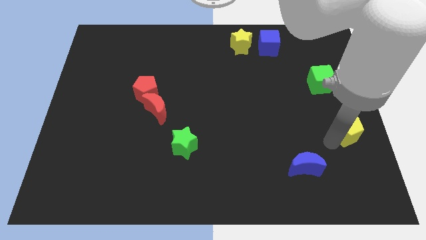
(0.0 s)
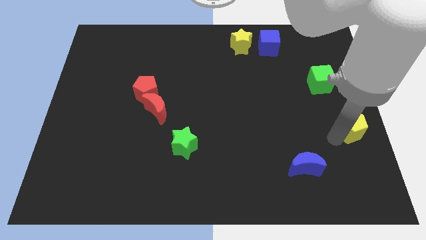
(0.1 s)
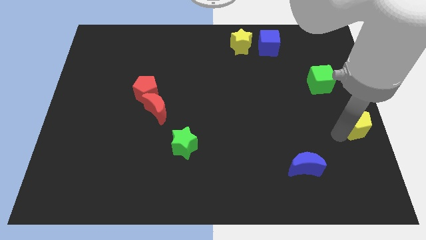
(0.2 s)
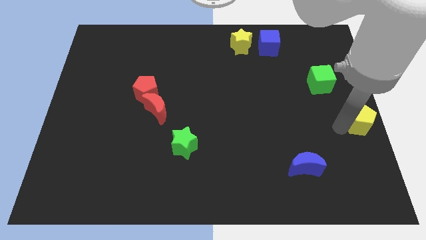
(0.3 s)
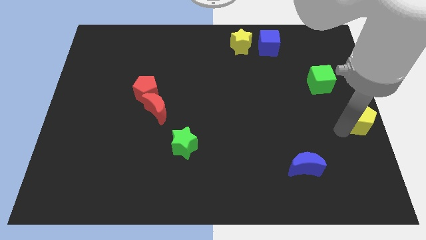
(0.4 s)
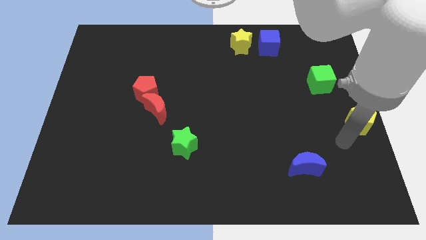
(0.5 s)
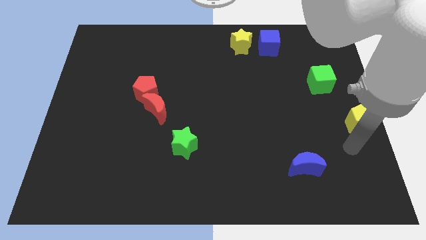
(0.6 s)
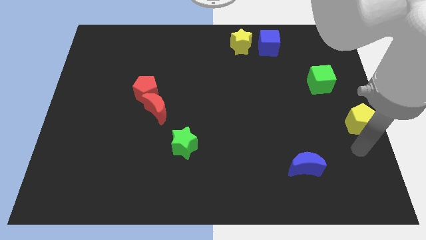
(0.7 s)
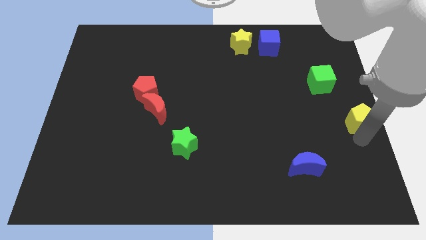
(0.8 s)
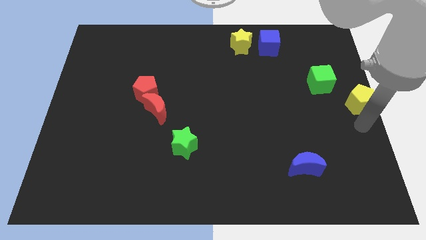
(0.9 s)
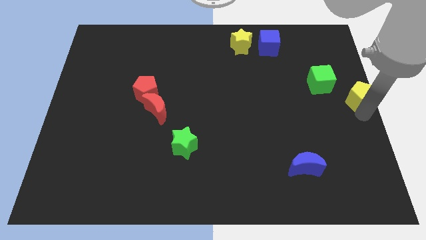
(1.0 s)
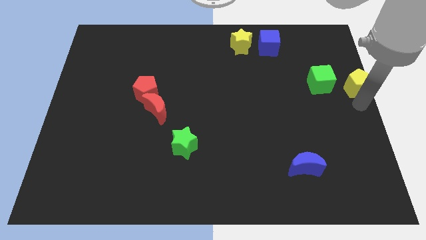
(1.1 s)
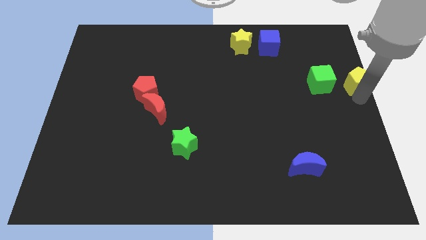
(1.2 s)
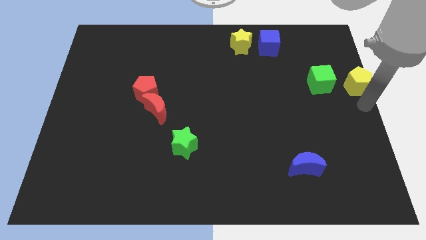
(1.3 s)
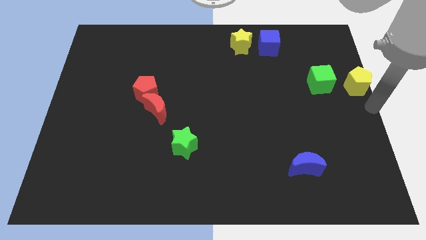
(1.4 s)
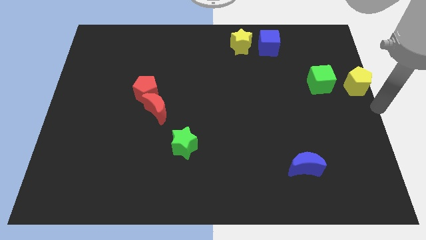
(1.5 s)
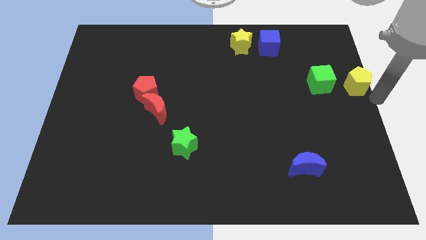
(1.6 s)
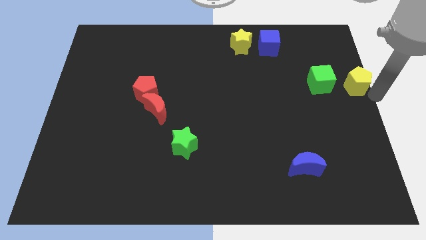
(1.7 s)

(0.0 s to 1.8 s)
put the yellow pentagon right to the green cube

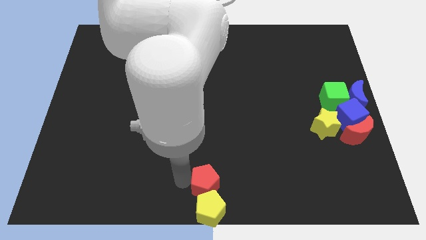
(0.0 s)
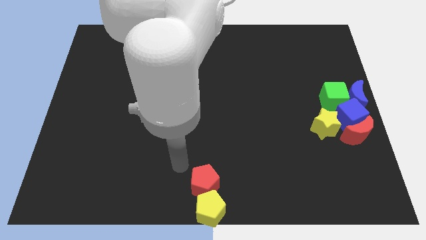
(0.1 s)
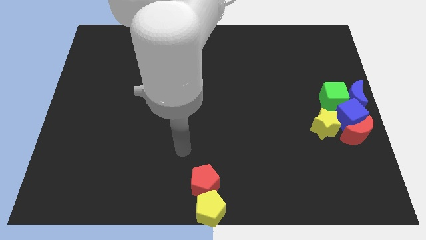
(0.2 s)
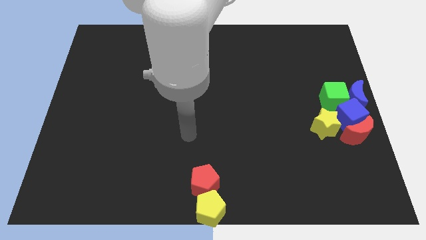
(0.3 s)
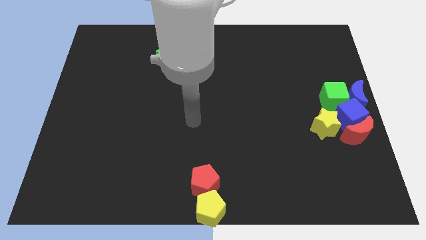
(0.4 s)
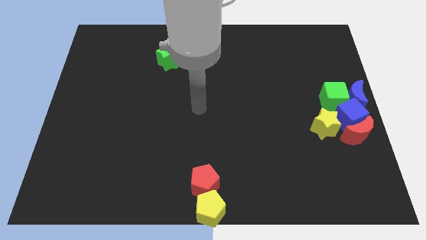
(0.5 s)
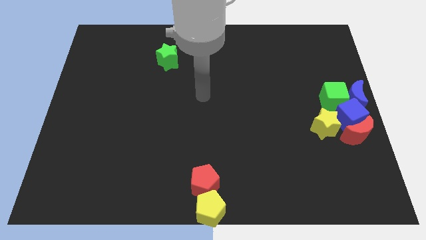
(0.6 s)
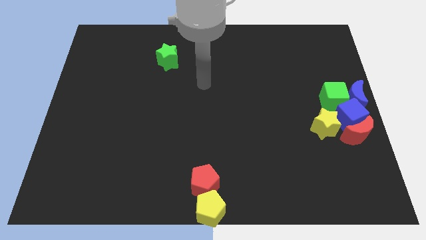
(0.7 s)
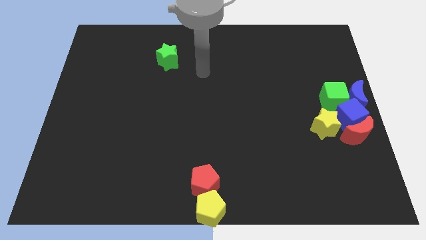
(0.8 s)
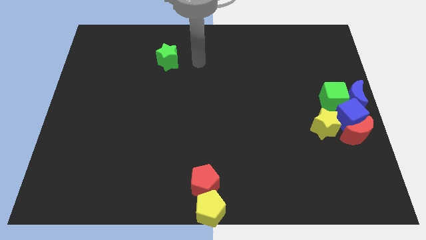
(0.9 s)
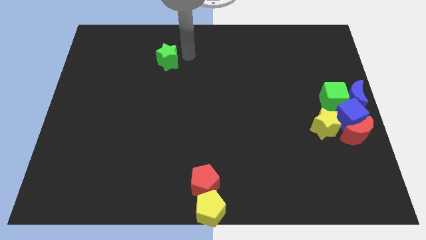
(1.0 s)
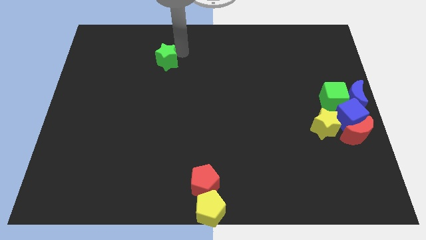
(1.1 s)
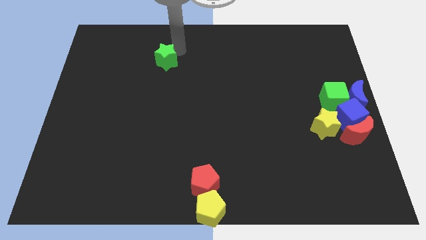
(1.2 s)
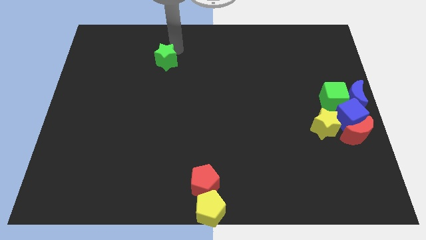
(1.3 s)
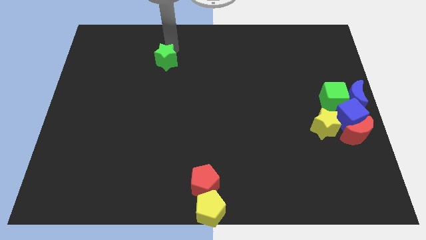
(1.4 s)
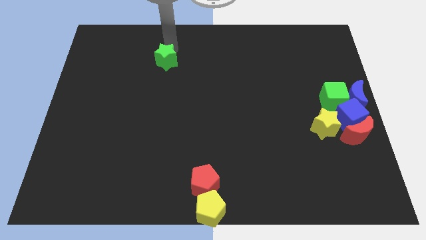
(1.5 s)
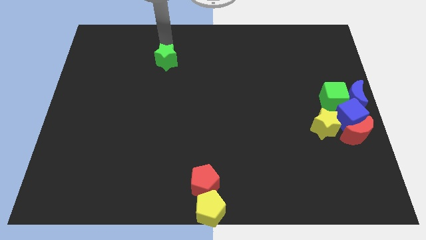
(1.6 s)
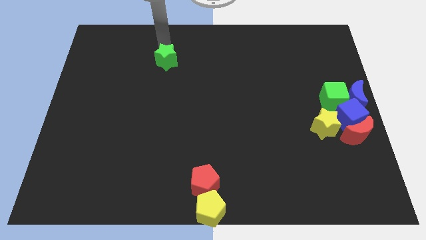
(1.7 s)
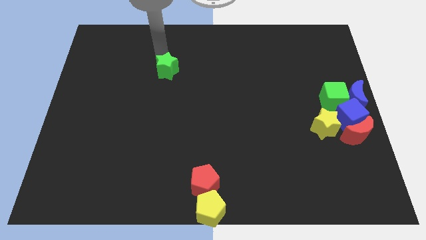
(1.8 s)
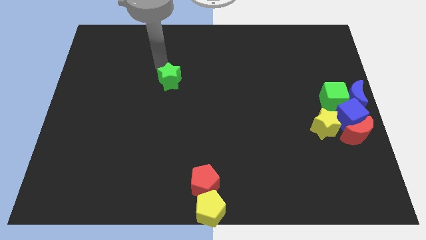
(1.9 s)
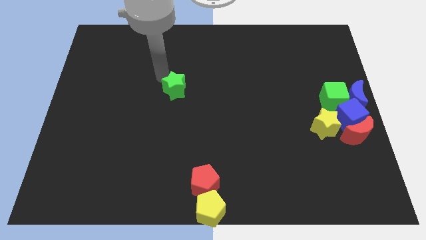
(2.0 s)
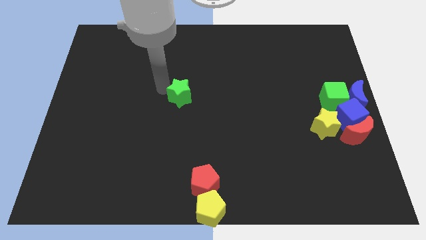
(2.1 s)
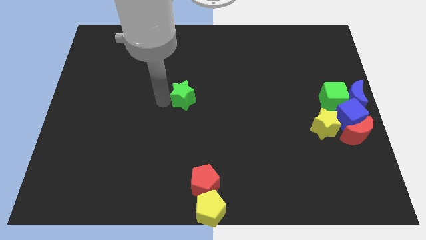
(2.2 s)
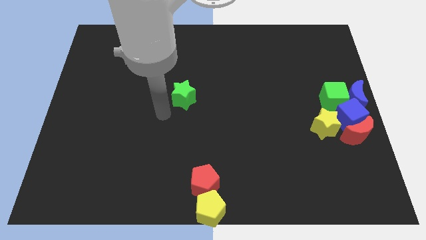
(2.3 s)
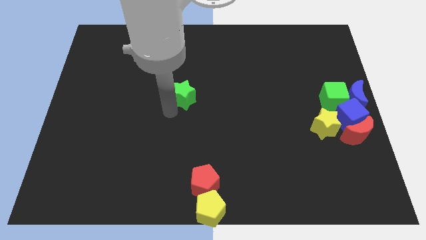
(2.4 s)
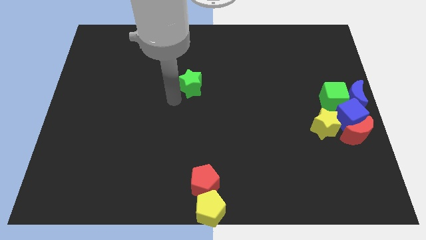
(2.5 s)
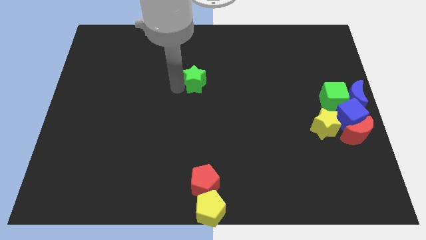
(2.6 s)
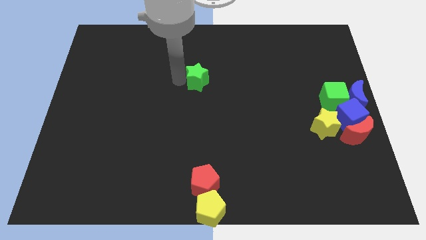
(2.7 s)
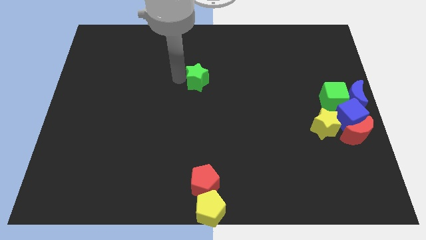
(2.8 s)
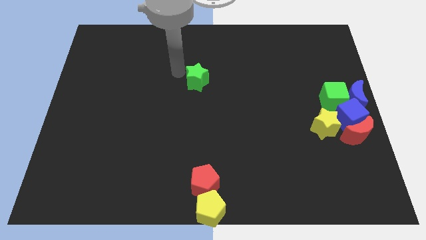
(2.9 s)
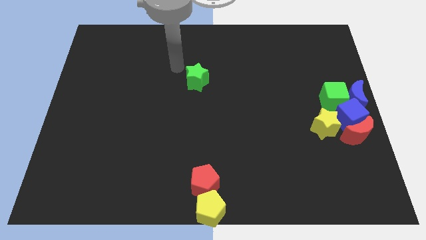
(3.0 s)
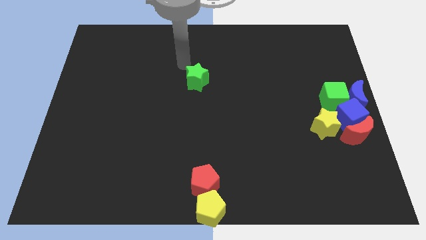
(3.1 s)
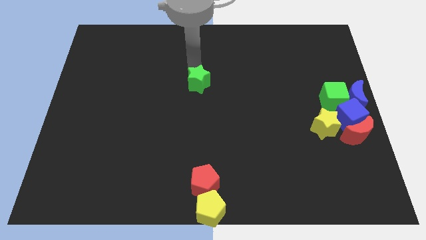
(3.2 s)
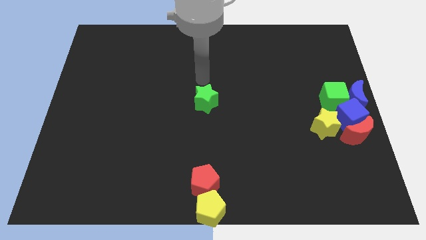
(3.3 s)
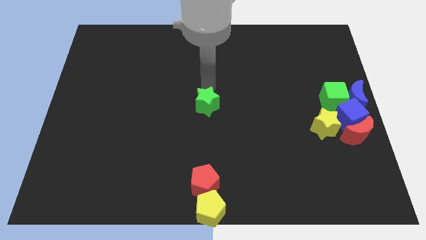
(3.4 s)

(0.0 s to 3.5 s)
drag green star towards middle of the board

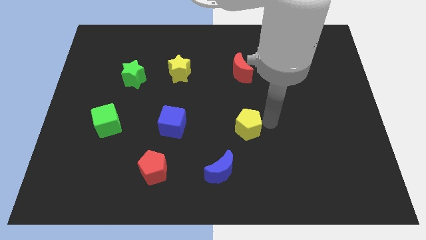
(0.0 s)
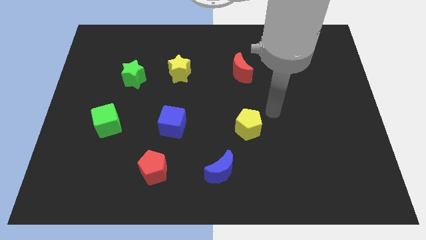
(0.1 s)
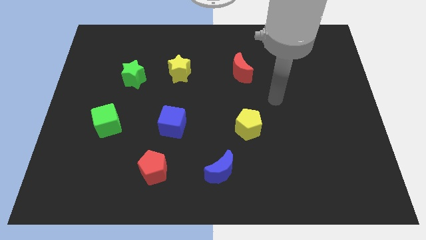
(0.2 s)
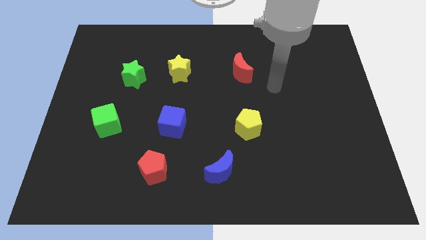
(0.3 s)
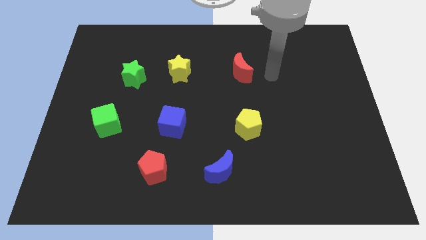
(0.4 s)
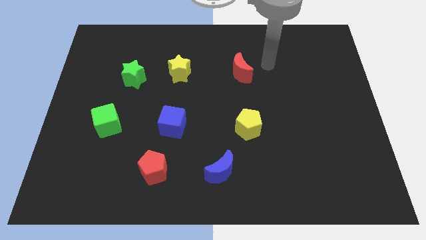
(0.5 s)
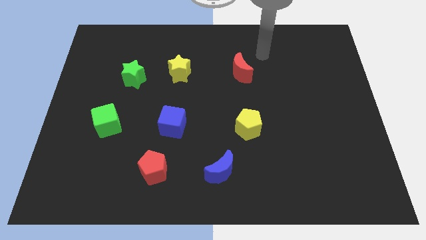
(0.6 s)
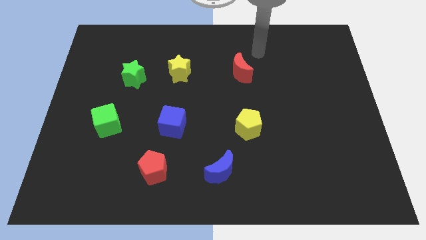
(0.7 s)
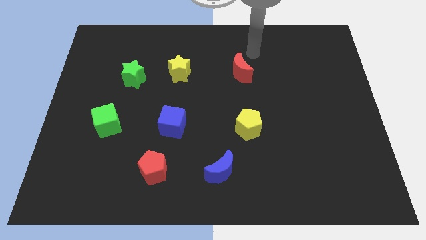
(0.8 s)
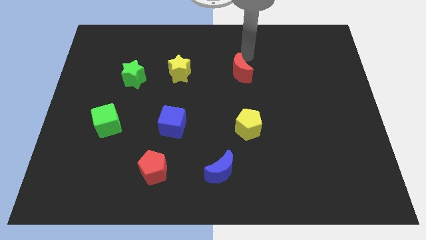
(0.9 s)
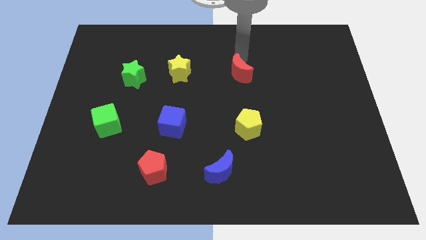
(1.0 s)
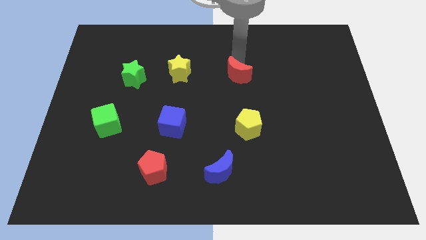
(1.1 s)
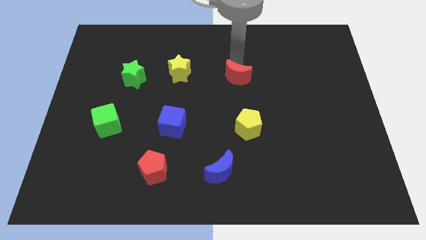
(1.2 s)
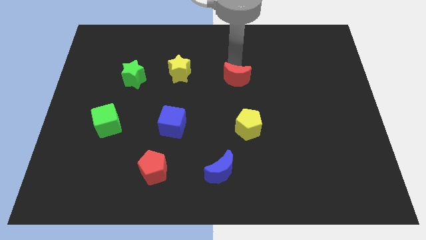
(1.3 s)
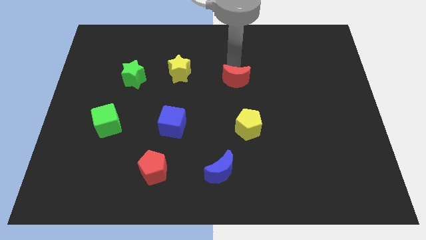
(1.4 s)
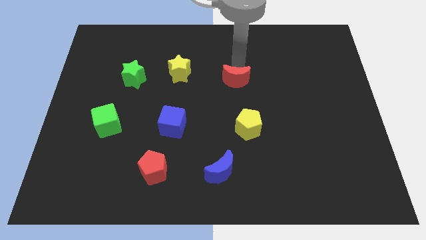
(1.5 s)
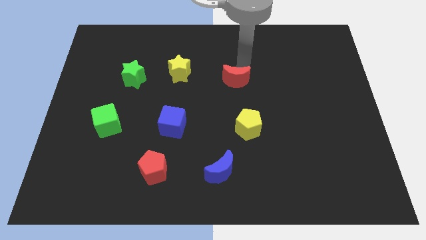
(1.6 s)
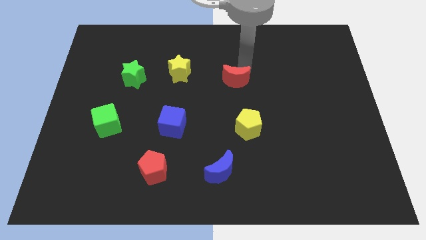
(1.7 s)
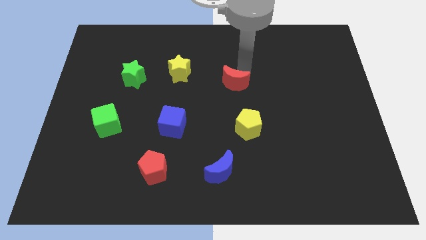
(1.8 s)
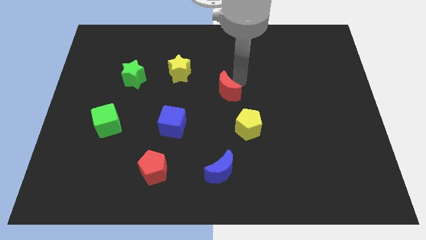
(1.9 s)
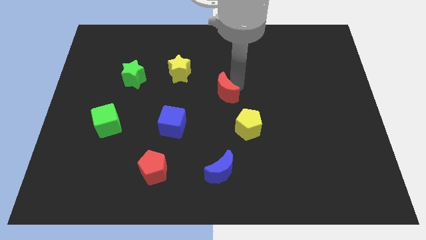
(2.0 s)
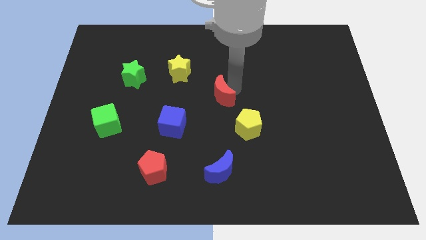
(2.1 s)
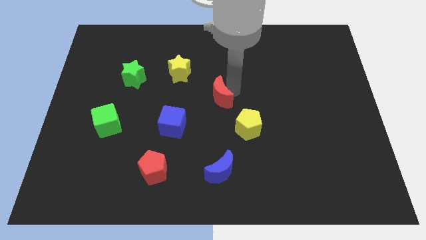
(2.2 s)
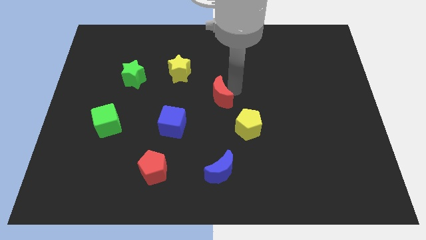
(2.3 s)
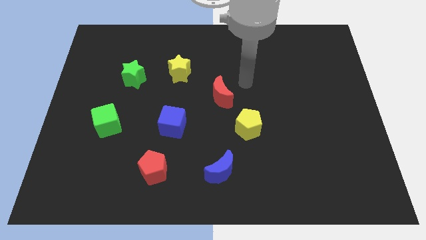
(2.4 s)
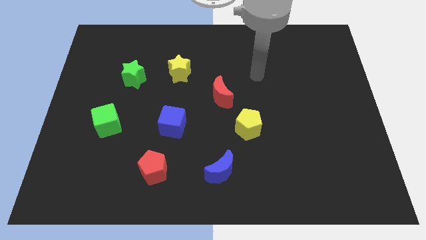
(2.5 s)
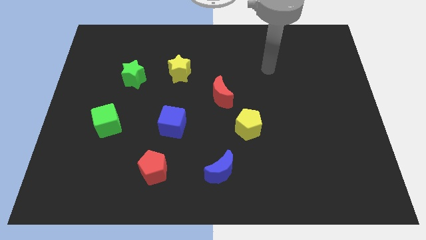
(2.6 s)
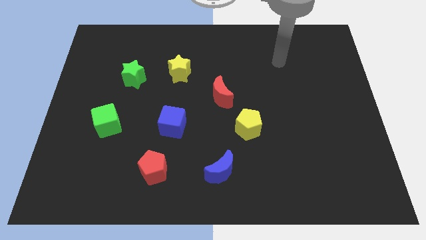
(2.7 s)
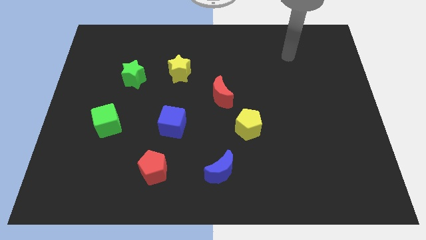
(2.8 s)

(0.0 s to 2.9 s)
move the red moon diagonally top right to the blue cube

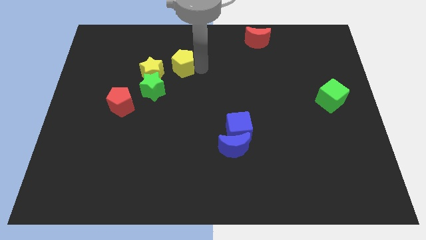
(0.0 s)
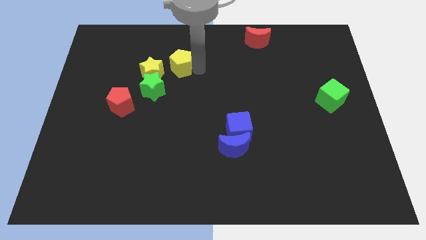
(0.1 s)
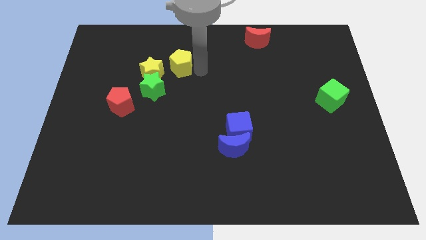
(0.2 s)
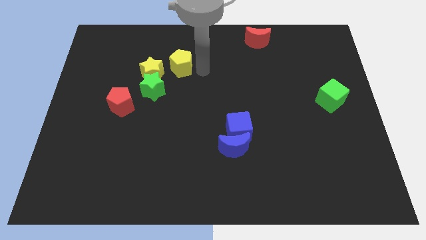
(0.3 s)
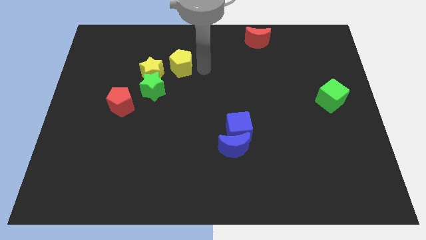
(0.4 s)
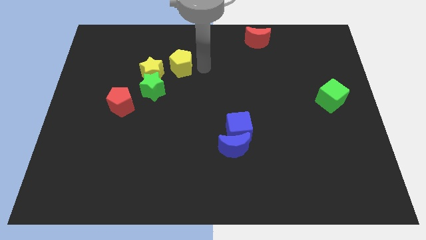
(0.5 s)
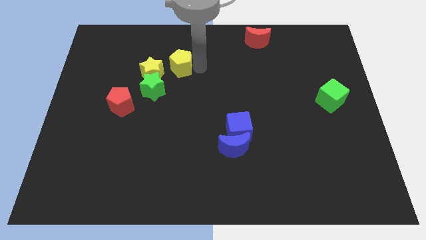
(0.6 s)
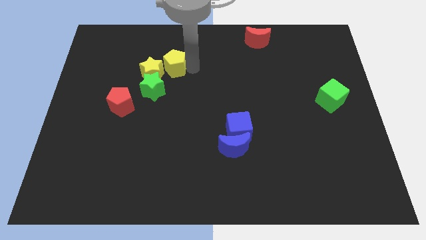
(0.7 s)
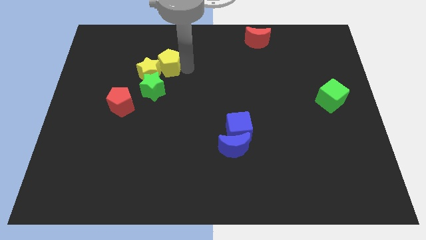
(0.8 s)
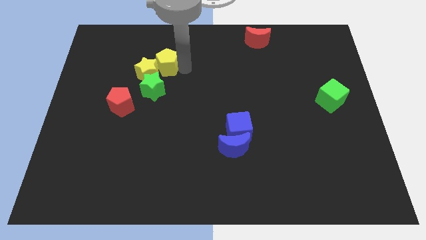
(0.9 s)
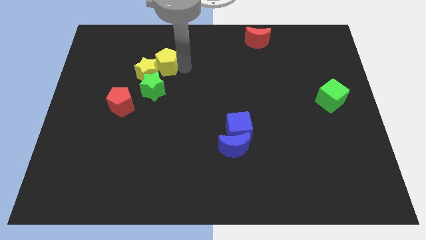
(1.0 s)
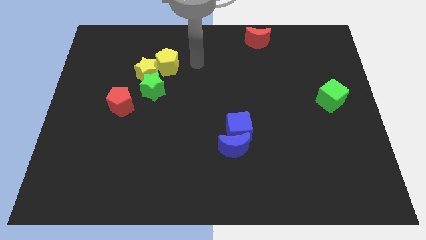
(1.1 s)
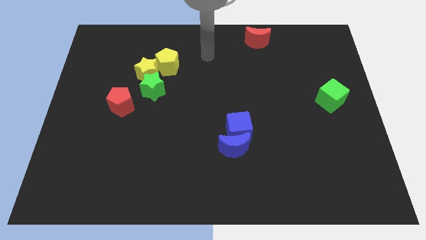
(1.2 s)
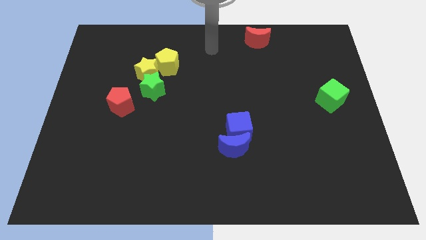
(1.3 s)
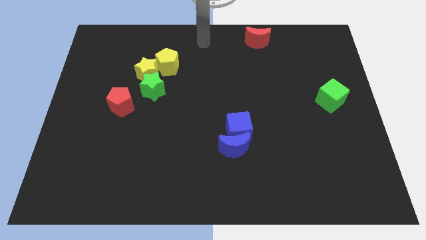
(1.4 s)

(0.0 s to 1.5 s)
push the yellow pentagon into the yellow star
